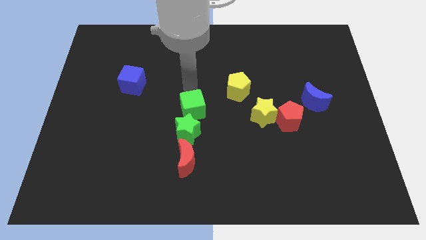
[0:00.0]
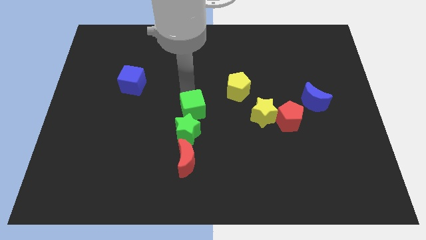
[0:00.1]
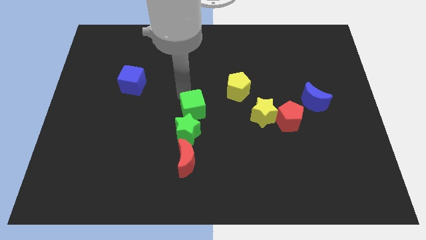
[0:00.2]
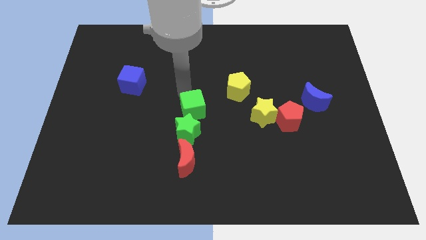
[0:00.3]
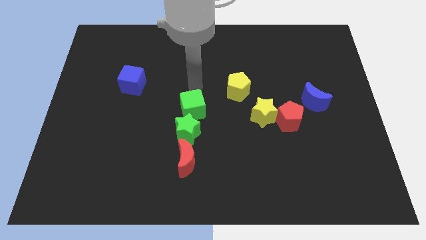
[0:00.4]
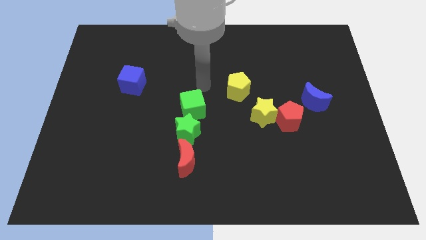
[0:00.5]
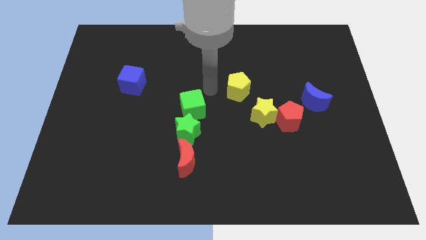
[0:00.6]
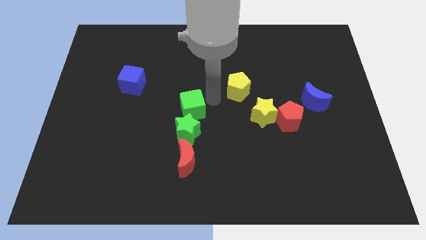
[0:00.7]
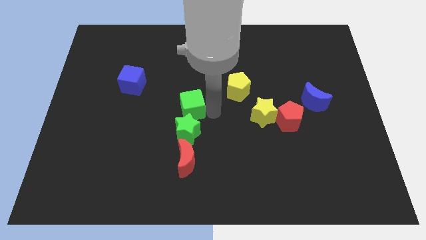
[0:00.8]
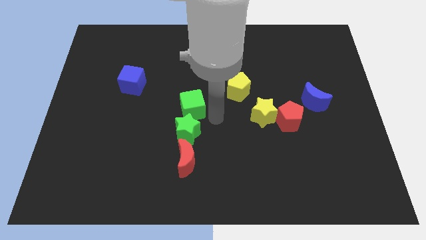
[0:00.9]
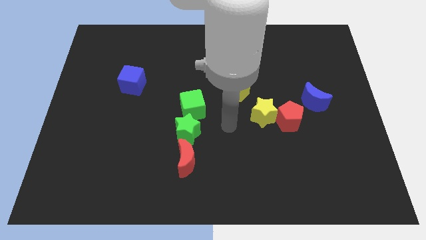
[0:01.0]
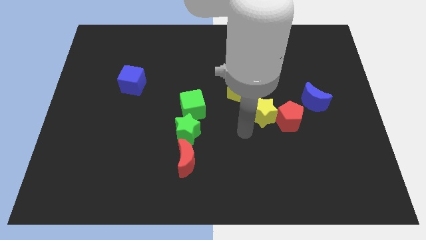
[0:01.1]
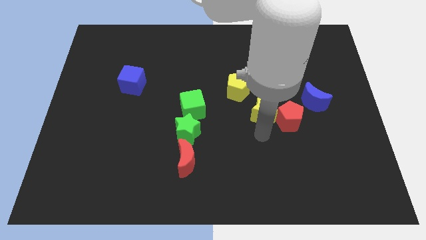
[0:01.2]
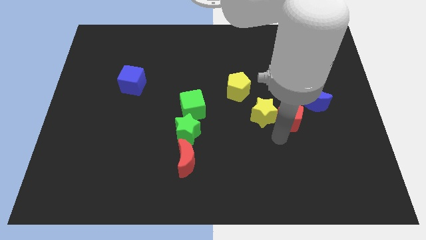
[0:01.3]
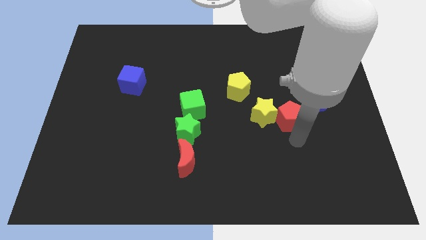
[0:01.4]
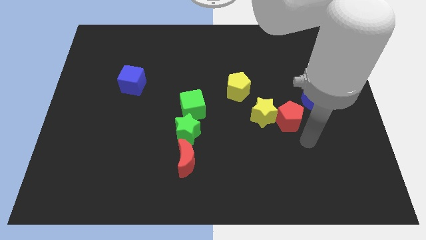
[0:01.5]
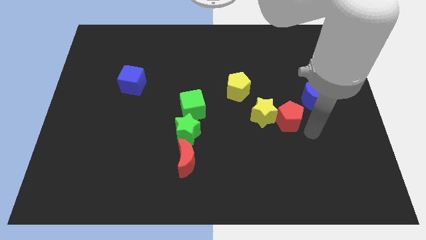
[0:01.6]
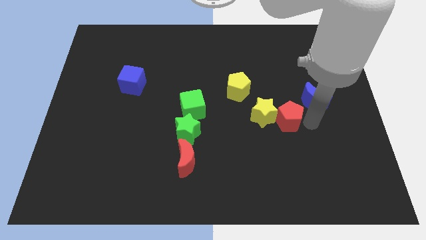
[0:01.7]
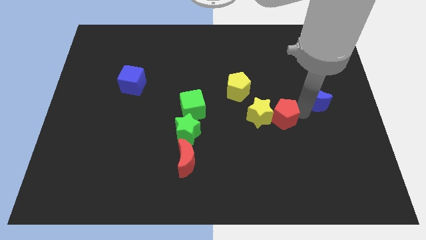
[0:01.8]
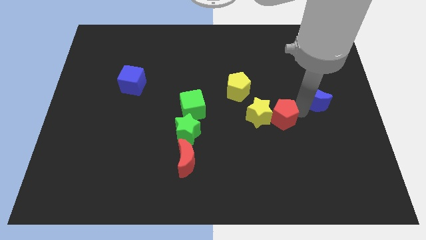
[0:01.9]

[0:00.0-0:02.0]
move your arm to the right of the red pentagon

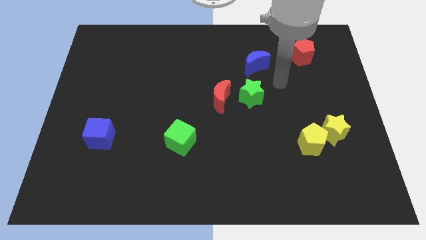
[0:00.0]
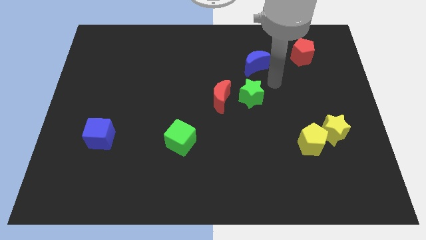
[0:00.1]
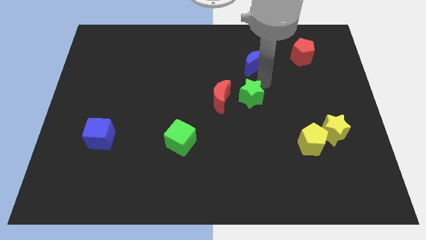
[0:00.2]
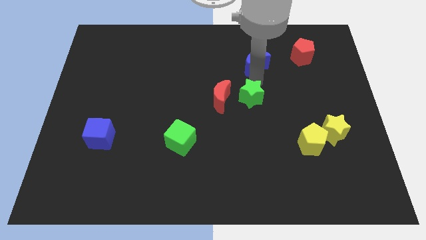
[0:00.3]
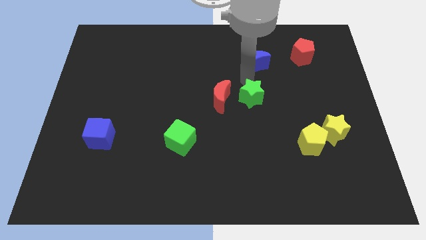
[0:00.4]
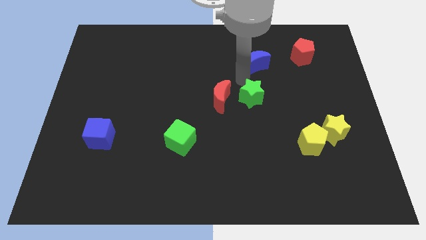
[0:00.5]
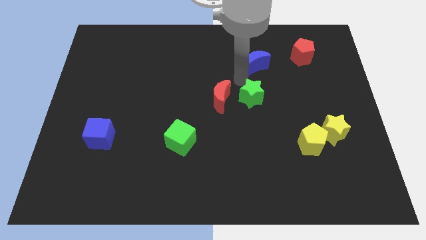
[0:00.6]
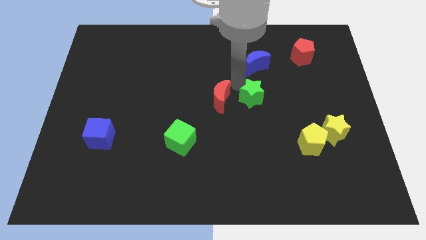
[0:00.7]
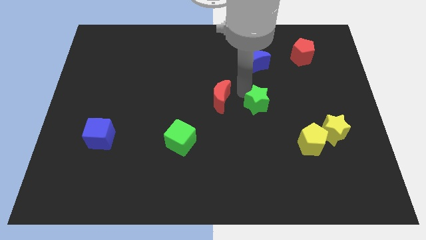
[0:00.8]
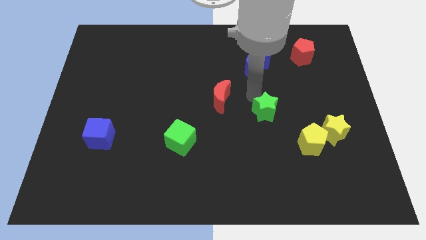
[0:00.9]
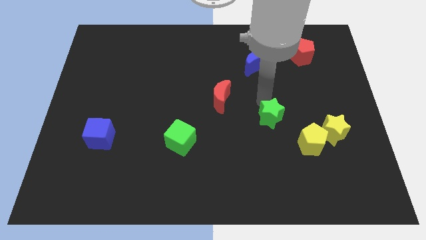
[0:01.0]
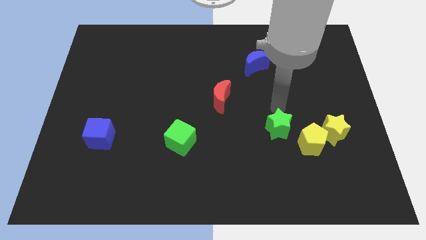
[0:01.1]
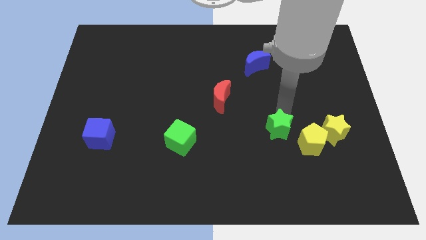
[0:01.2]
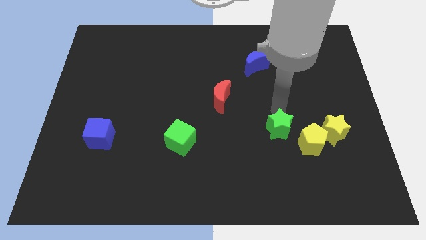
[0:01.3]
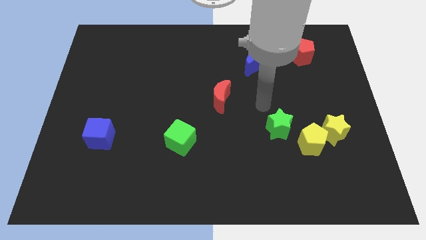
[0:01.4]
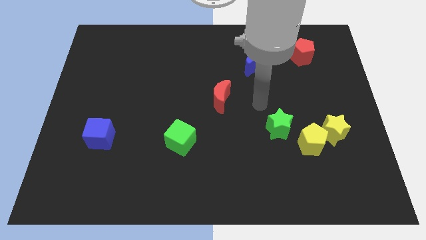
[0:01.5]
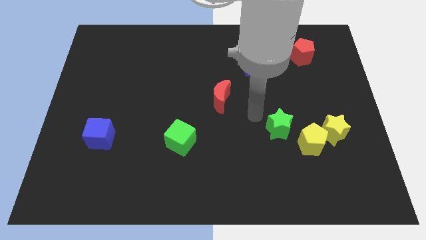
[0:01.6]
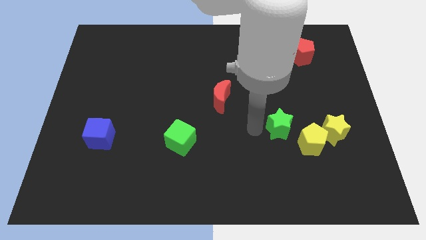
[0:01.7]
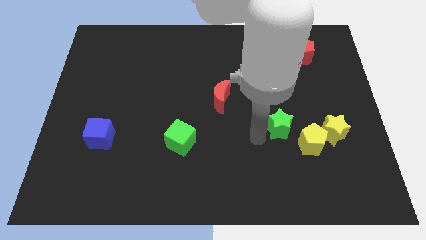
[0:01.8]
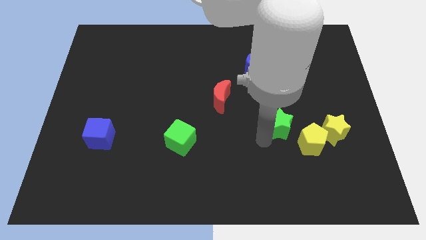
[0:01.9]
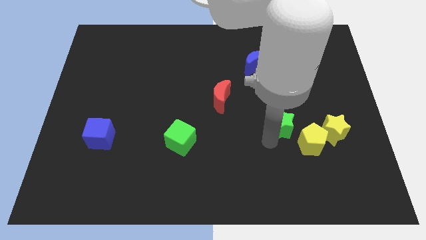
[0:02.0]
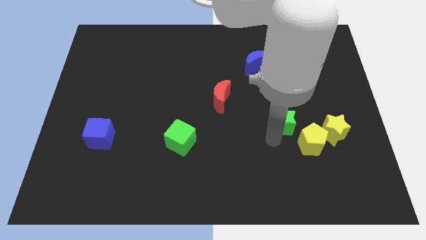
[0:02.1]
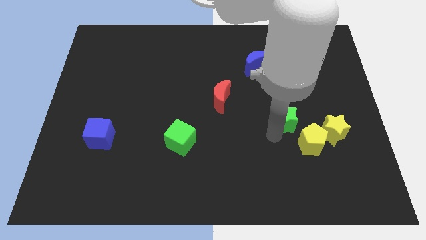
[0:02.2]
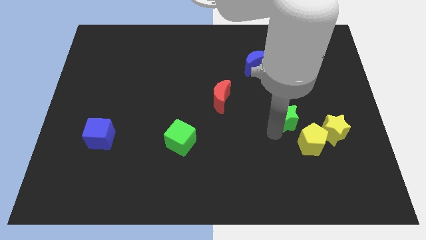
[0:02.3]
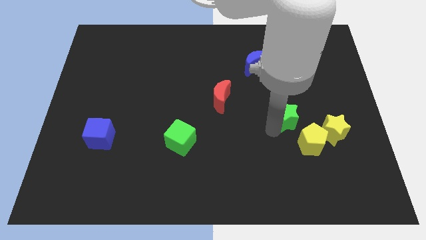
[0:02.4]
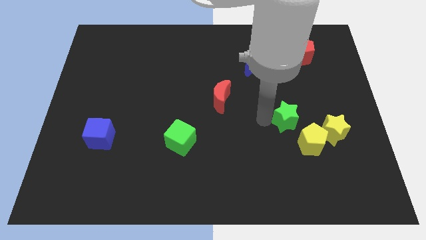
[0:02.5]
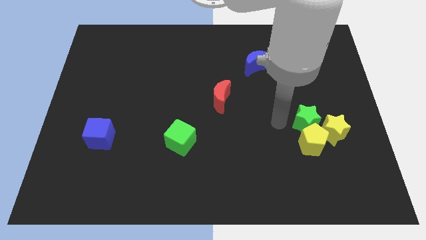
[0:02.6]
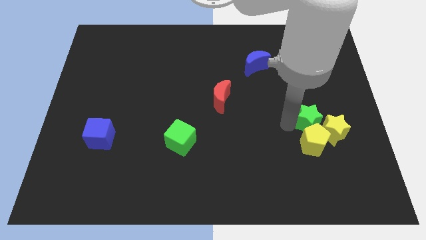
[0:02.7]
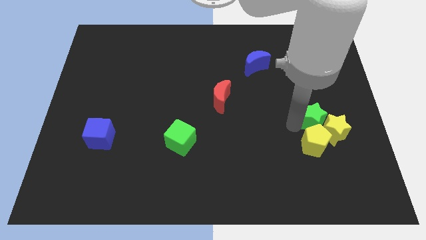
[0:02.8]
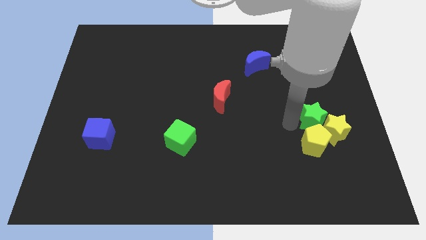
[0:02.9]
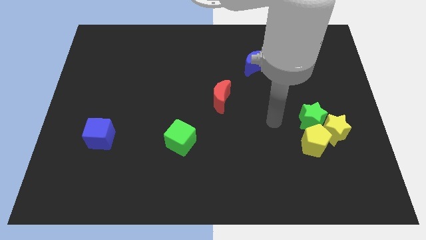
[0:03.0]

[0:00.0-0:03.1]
move the green star into the yellow star

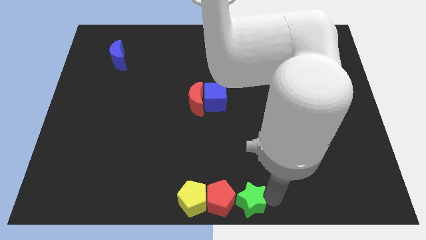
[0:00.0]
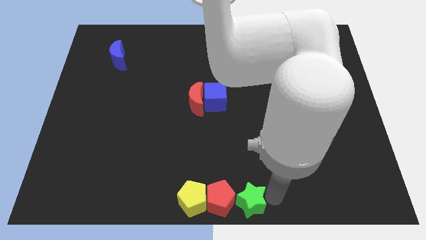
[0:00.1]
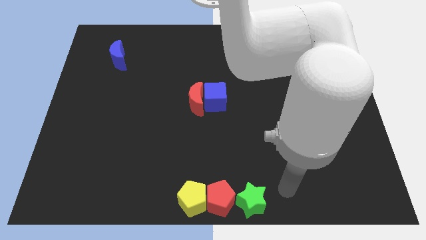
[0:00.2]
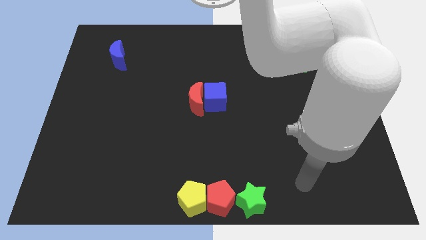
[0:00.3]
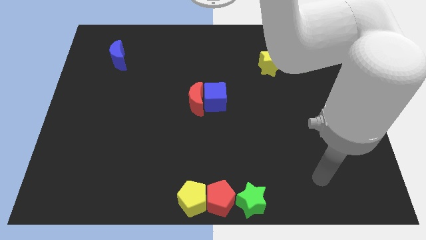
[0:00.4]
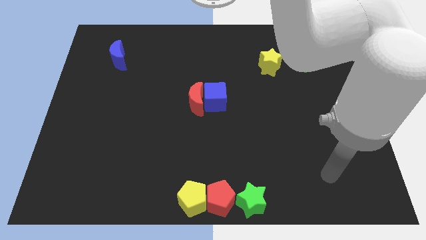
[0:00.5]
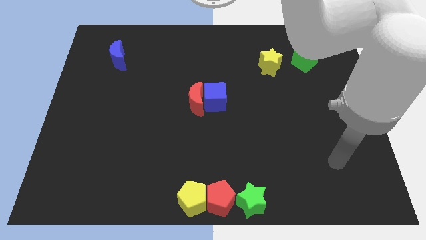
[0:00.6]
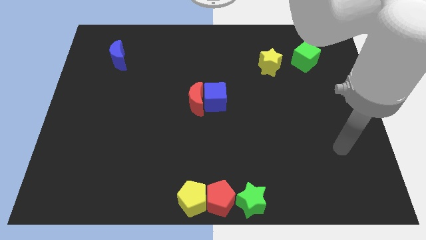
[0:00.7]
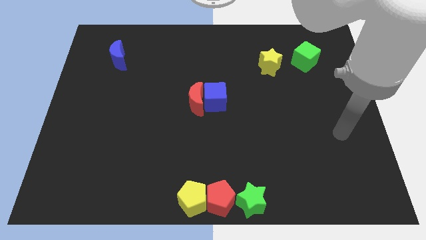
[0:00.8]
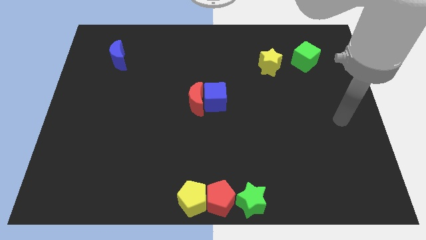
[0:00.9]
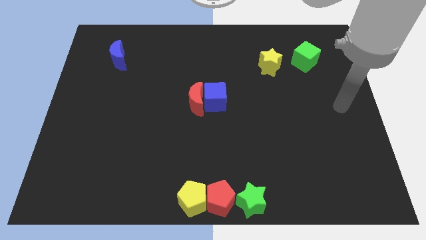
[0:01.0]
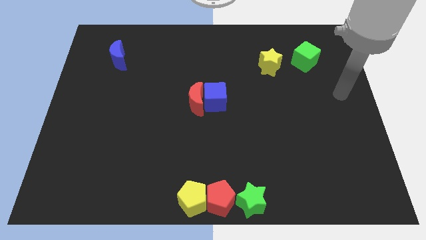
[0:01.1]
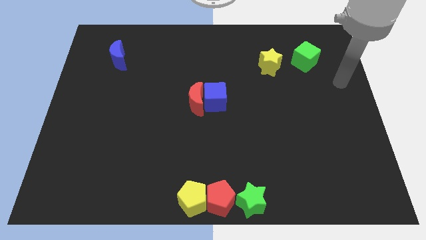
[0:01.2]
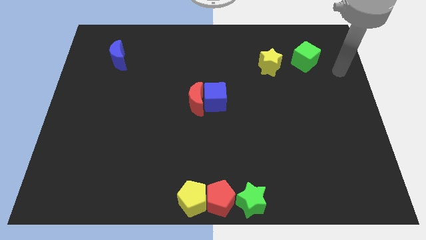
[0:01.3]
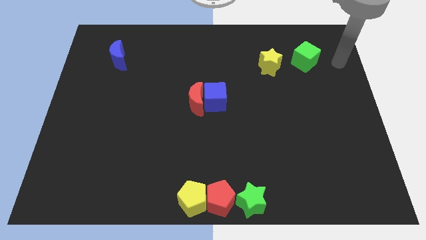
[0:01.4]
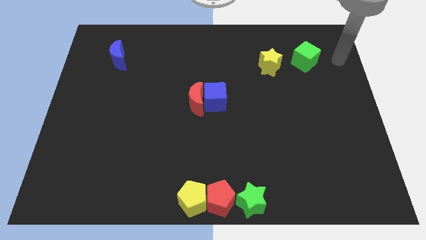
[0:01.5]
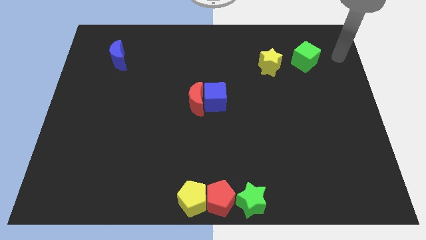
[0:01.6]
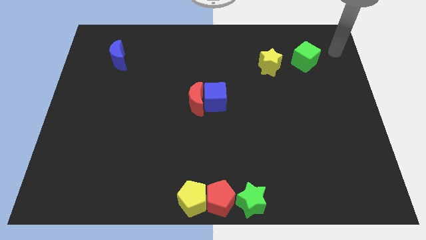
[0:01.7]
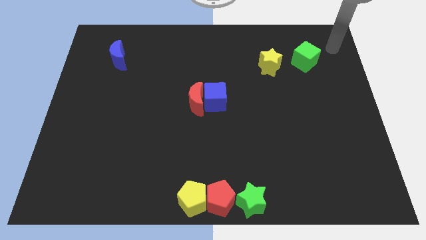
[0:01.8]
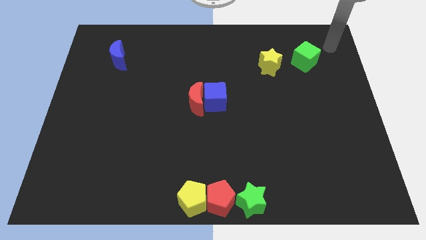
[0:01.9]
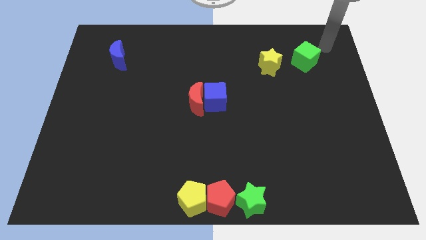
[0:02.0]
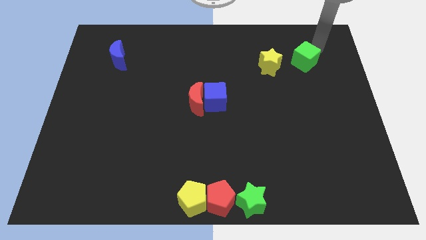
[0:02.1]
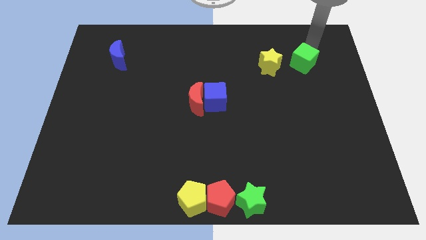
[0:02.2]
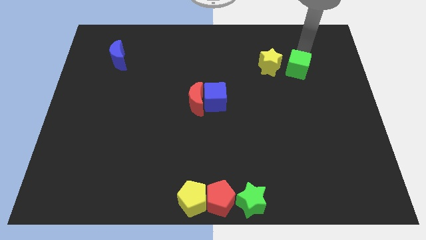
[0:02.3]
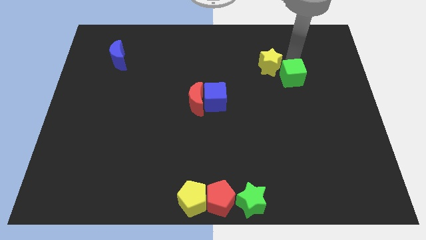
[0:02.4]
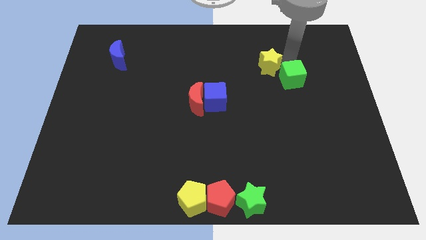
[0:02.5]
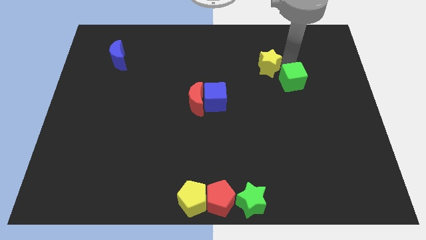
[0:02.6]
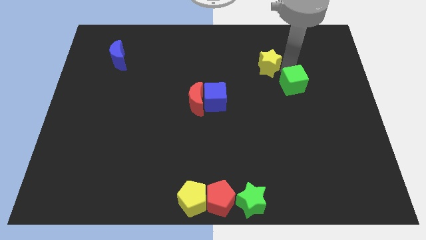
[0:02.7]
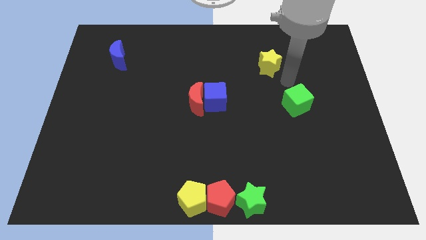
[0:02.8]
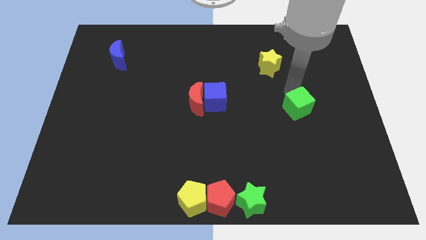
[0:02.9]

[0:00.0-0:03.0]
move the green cube to the bottom right of the yellow star

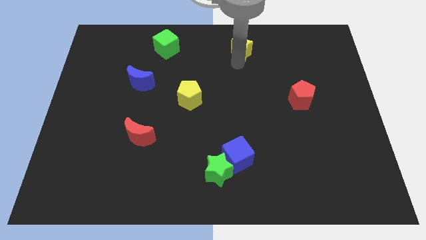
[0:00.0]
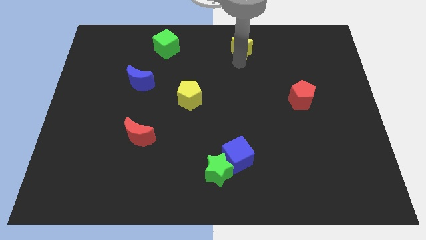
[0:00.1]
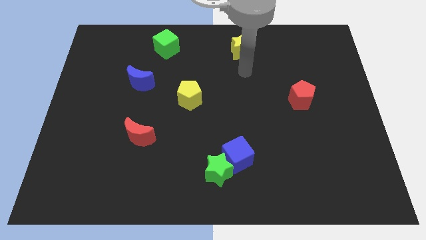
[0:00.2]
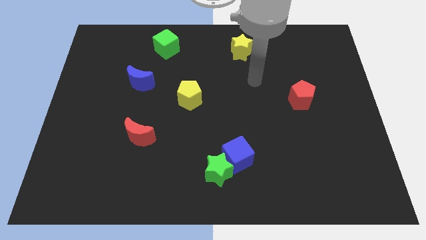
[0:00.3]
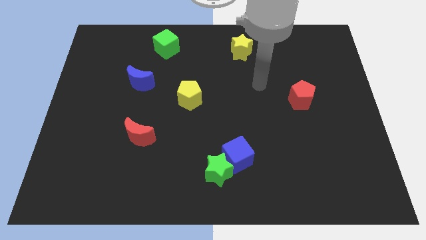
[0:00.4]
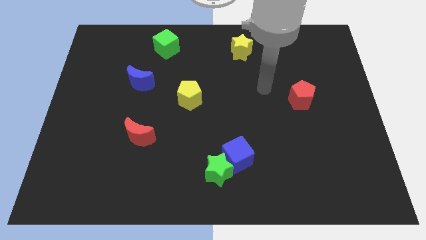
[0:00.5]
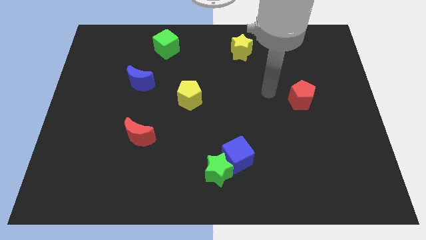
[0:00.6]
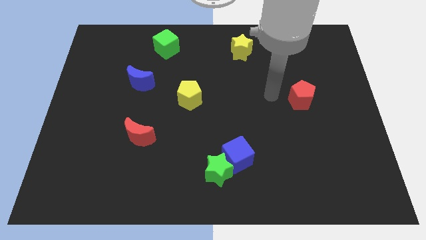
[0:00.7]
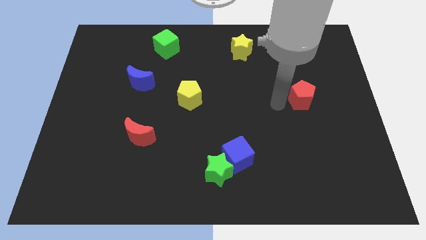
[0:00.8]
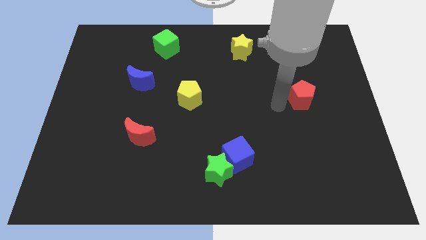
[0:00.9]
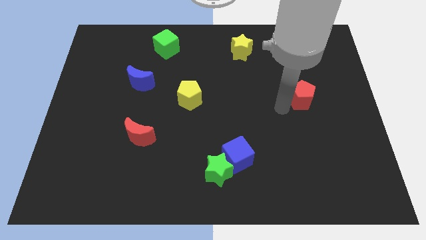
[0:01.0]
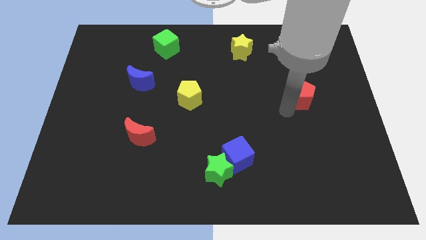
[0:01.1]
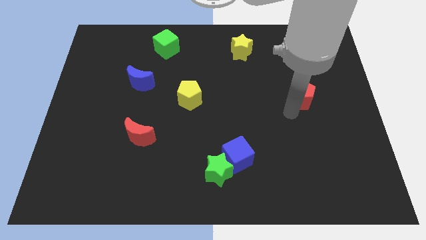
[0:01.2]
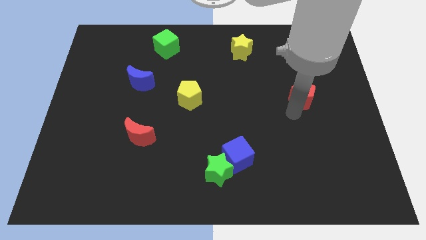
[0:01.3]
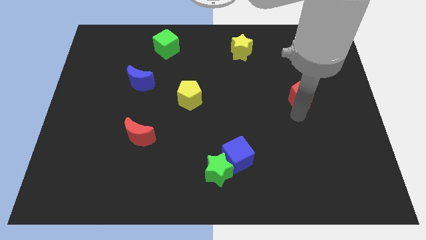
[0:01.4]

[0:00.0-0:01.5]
move your arm away from the yellow star
